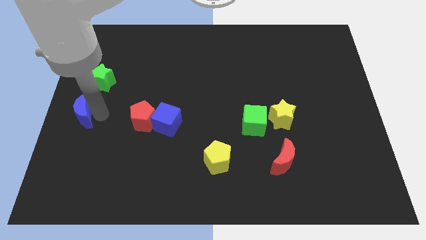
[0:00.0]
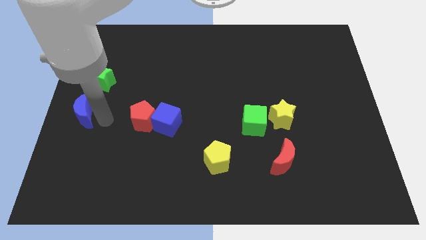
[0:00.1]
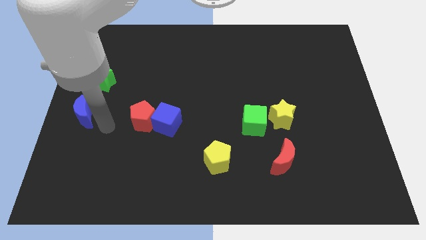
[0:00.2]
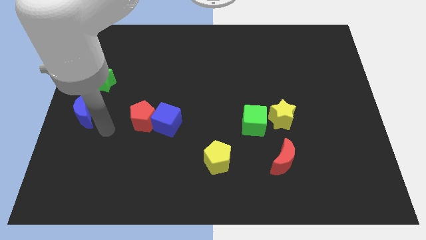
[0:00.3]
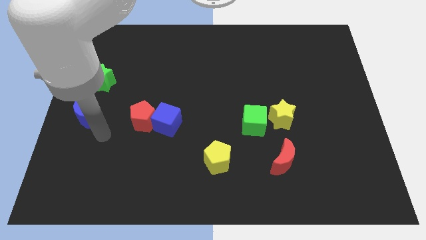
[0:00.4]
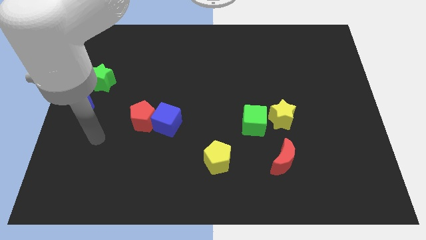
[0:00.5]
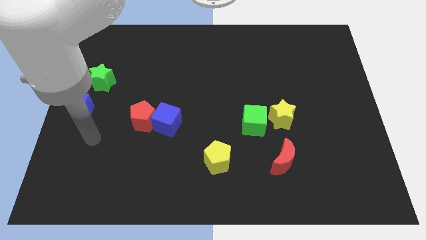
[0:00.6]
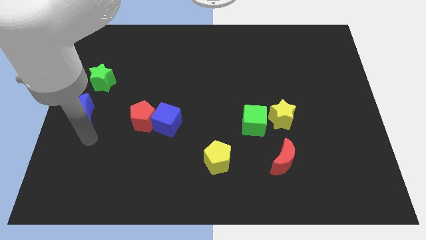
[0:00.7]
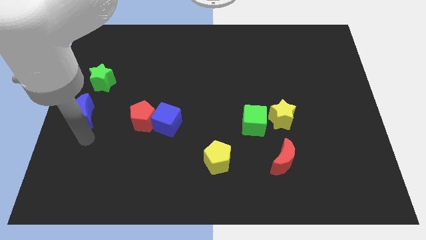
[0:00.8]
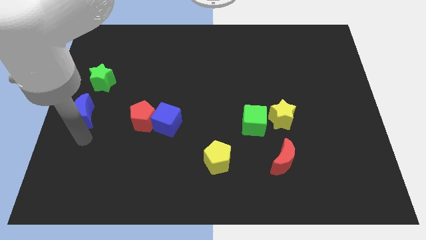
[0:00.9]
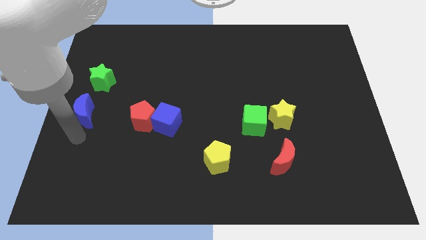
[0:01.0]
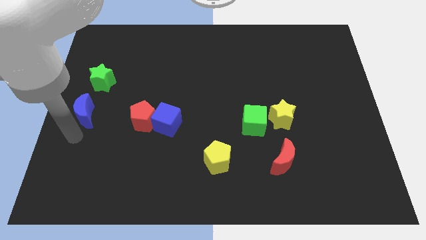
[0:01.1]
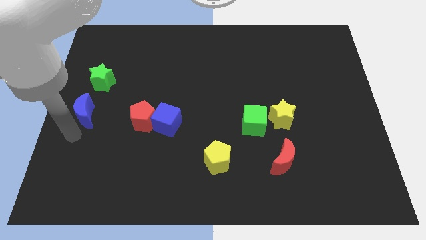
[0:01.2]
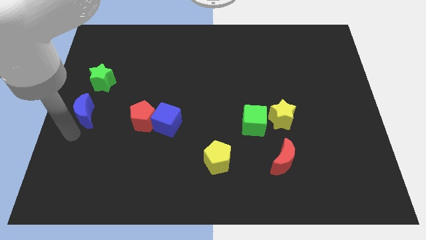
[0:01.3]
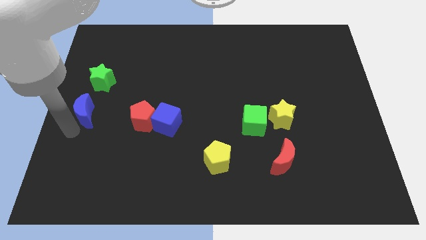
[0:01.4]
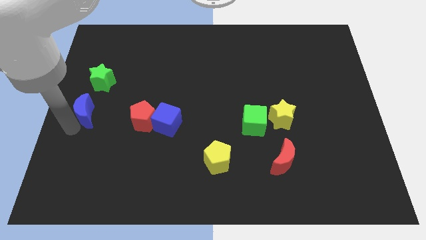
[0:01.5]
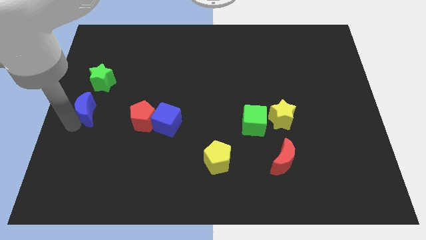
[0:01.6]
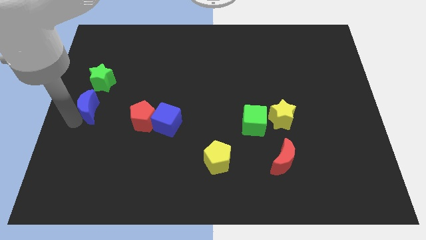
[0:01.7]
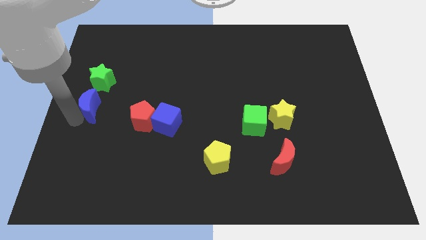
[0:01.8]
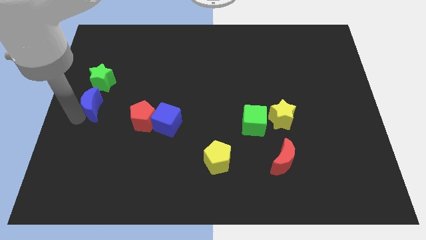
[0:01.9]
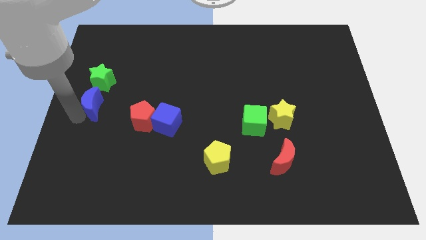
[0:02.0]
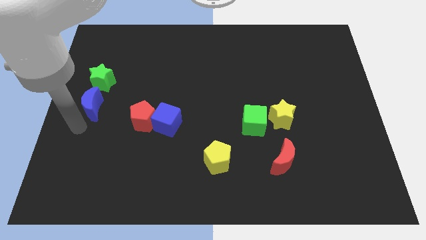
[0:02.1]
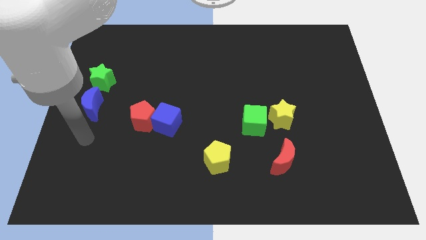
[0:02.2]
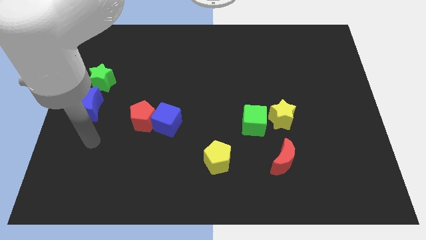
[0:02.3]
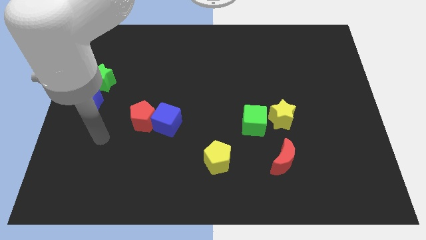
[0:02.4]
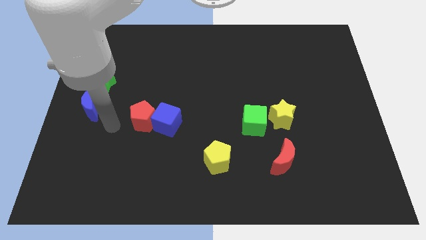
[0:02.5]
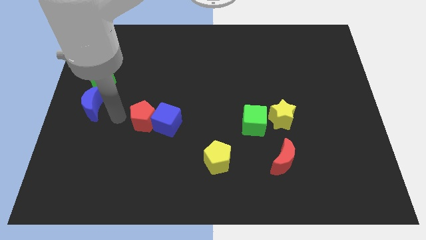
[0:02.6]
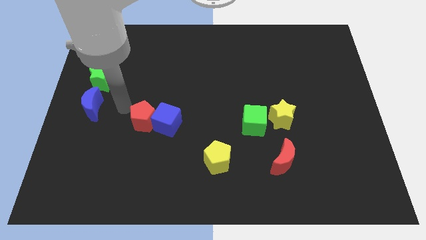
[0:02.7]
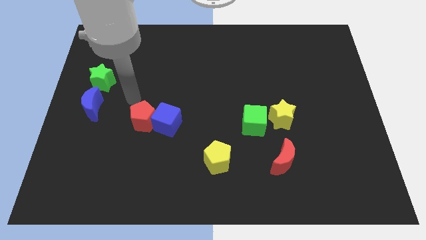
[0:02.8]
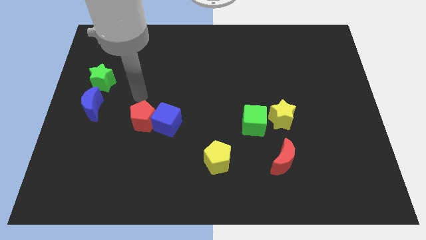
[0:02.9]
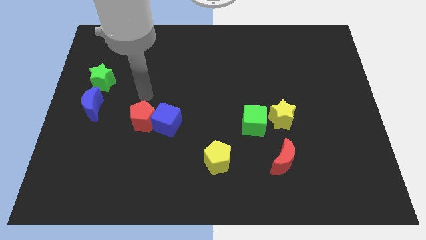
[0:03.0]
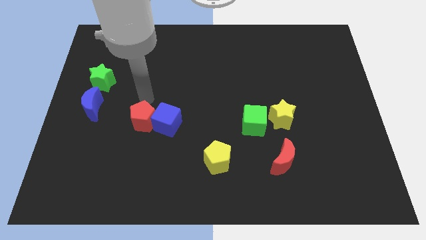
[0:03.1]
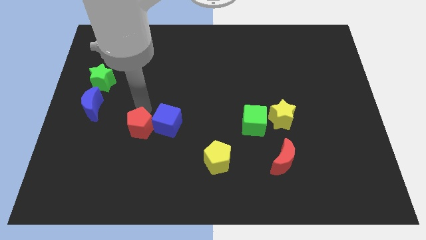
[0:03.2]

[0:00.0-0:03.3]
move the blue crescent slightly to the top

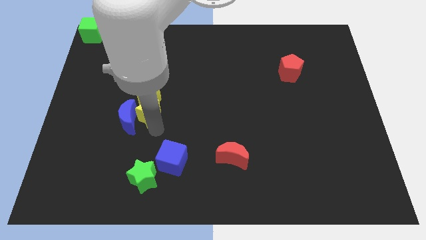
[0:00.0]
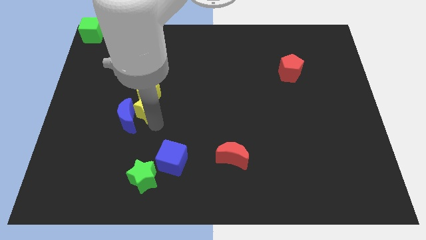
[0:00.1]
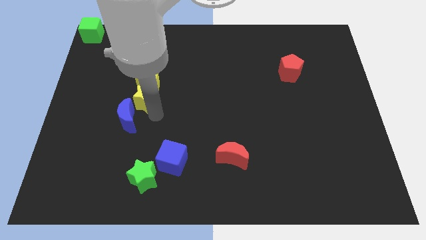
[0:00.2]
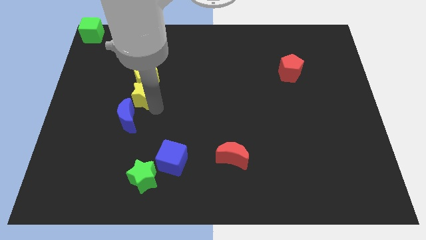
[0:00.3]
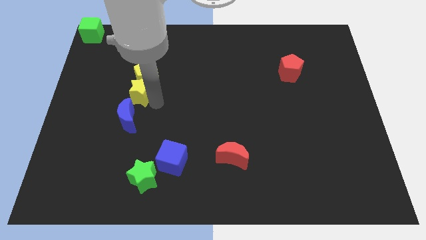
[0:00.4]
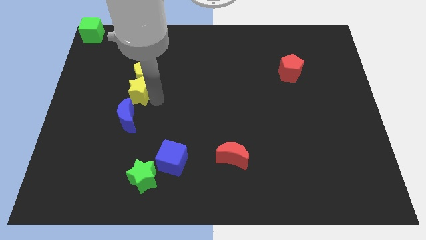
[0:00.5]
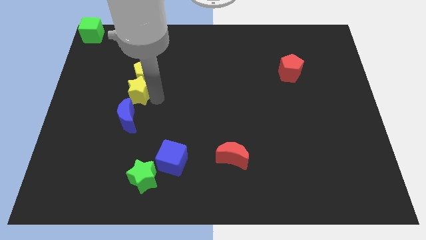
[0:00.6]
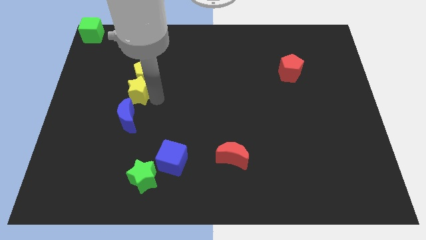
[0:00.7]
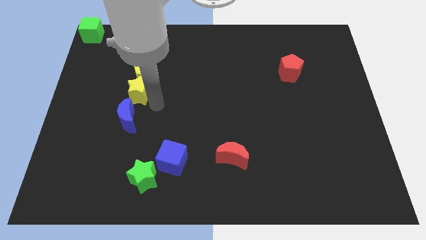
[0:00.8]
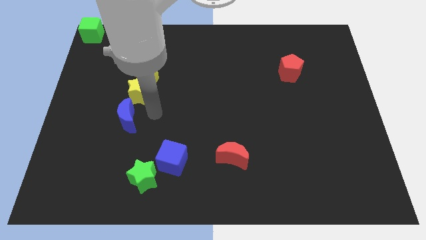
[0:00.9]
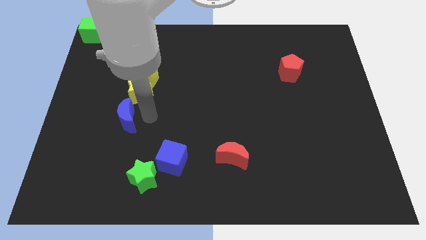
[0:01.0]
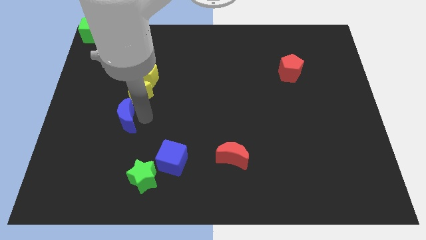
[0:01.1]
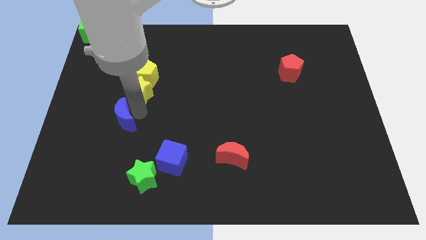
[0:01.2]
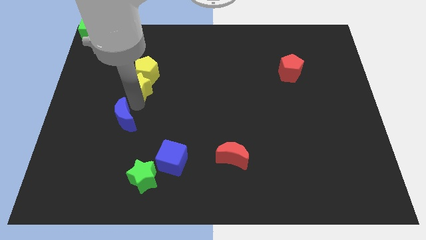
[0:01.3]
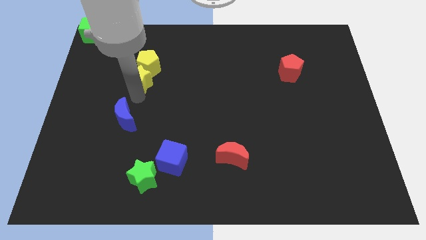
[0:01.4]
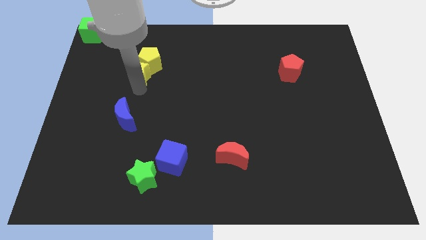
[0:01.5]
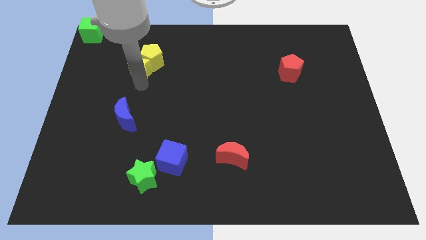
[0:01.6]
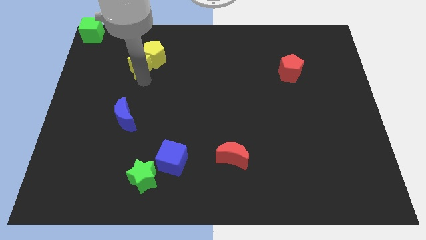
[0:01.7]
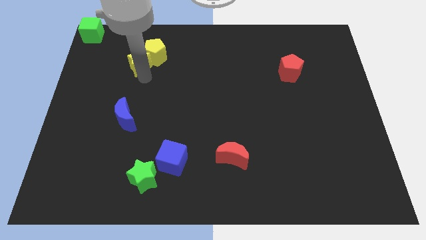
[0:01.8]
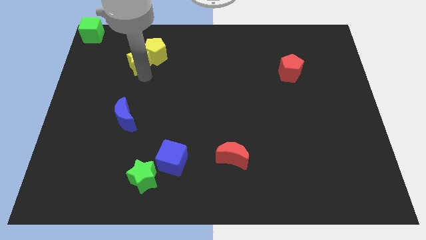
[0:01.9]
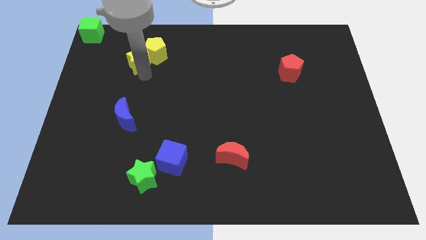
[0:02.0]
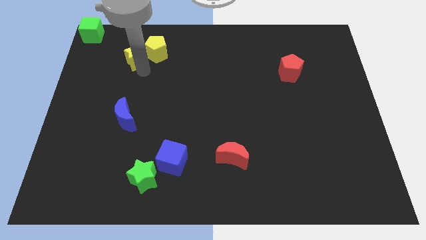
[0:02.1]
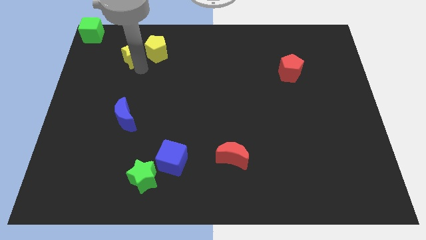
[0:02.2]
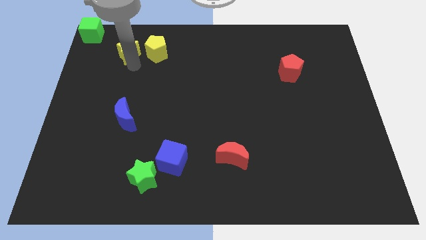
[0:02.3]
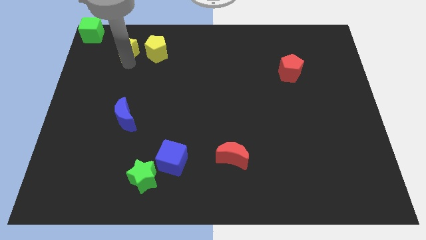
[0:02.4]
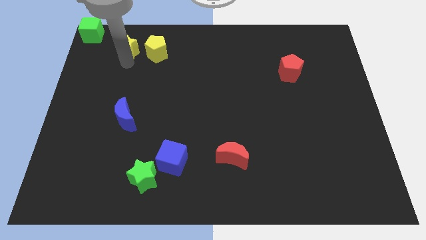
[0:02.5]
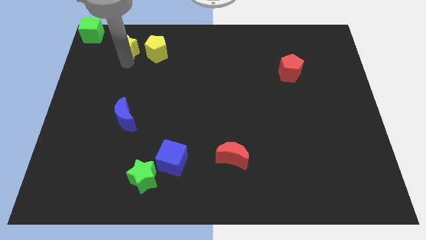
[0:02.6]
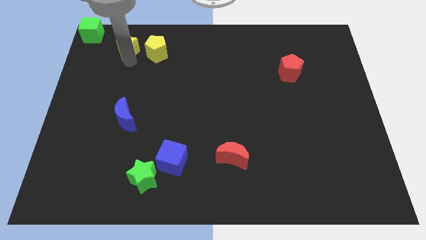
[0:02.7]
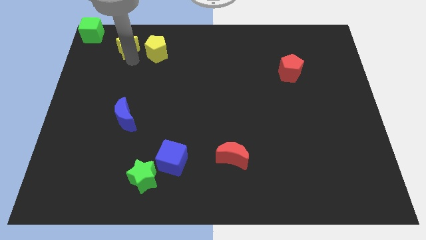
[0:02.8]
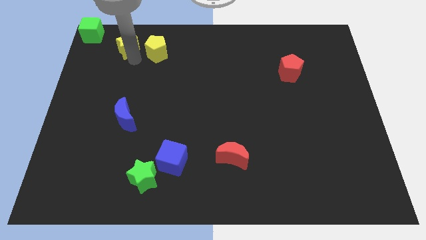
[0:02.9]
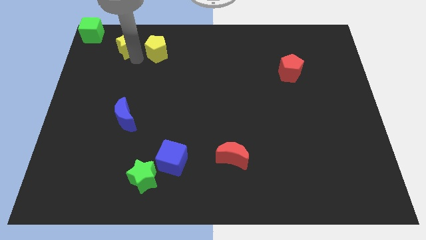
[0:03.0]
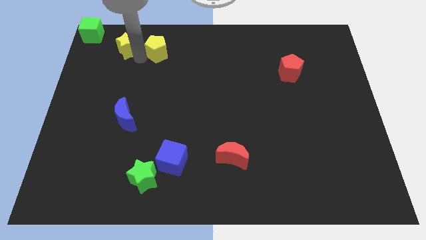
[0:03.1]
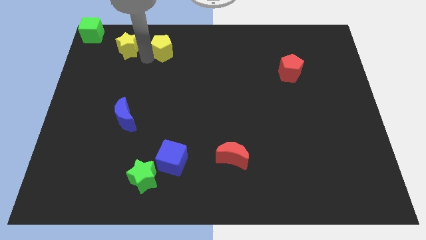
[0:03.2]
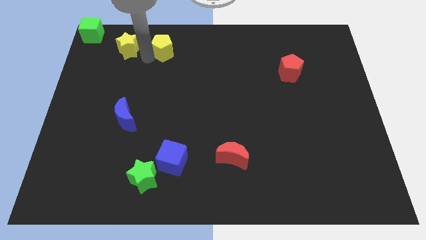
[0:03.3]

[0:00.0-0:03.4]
place the yellow star parallel left to the yellow pentagon

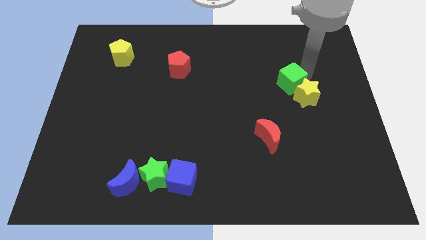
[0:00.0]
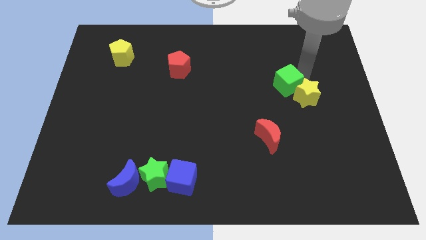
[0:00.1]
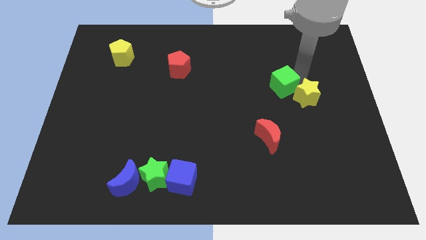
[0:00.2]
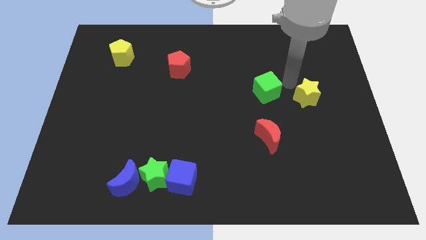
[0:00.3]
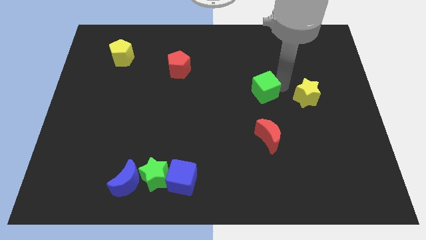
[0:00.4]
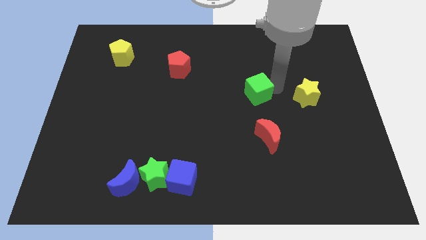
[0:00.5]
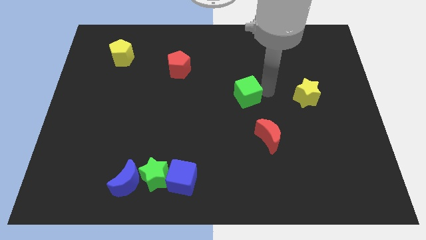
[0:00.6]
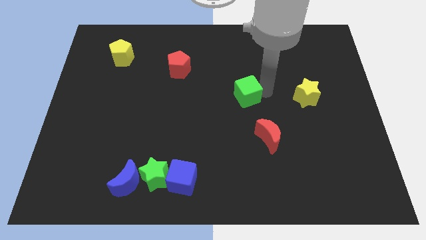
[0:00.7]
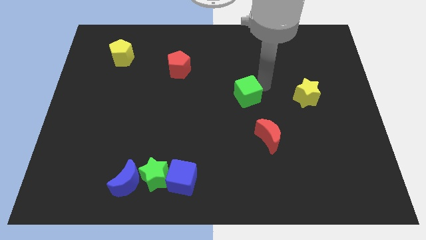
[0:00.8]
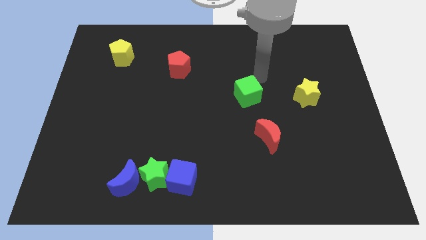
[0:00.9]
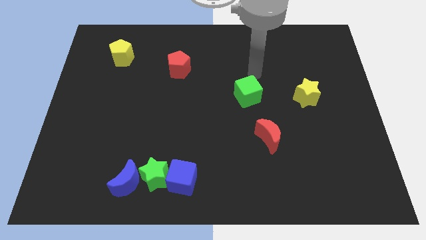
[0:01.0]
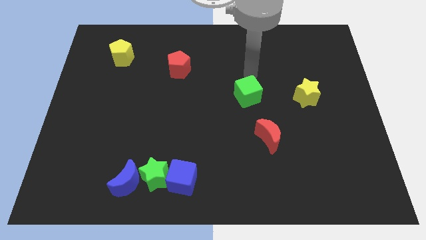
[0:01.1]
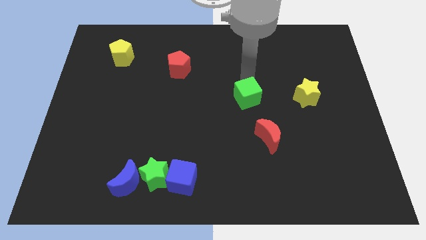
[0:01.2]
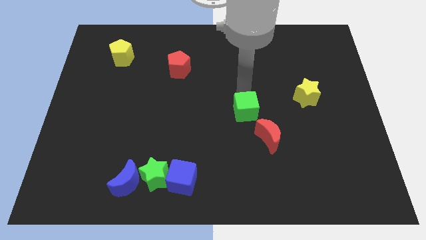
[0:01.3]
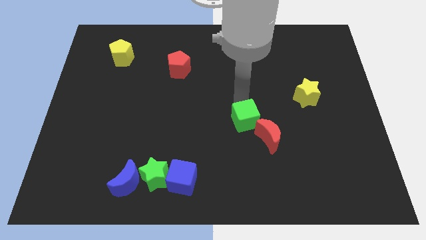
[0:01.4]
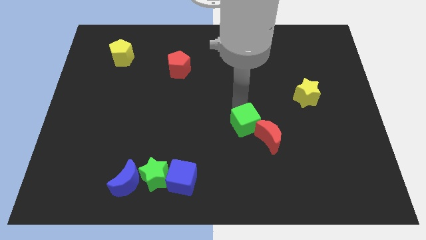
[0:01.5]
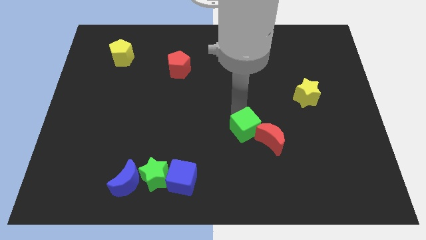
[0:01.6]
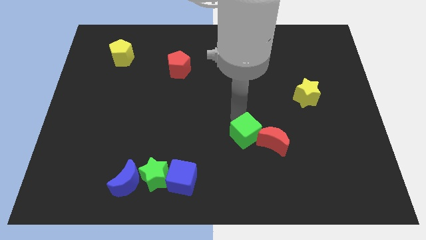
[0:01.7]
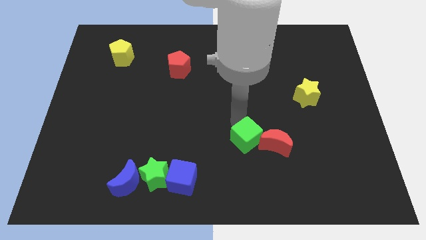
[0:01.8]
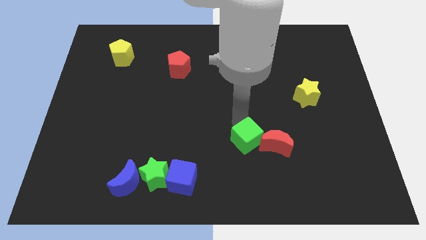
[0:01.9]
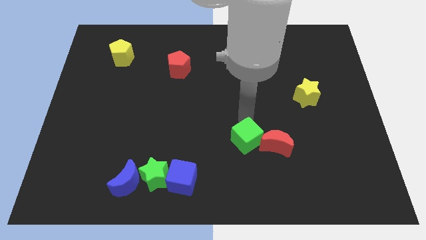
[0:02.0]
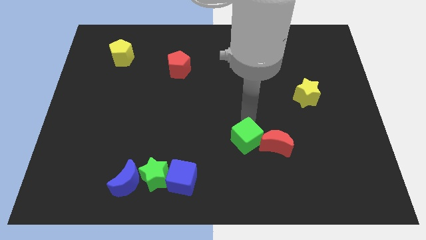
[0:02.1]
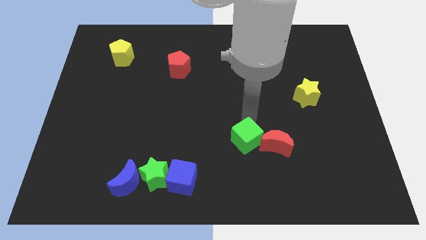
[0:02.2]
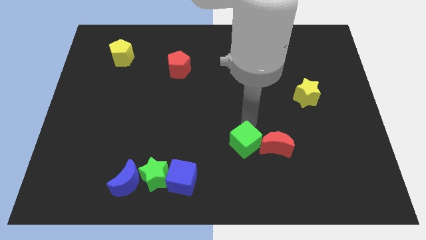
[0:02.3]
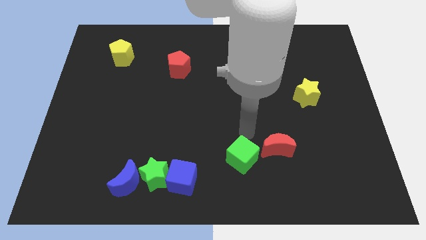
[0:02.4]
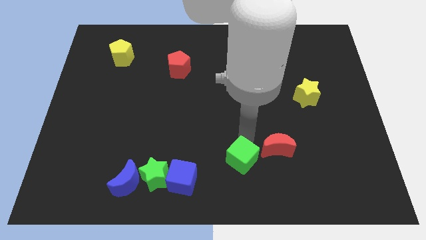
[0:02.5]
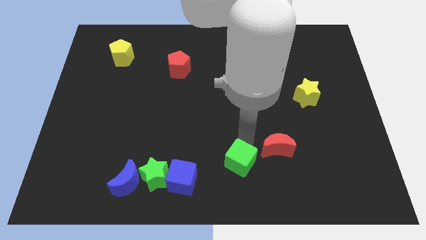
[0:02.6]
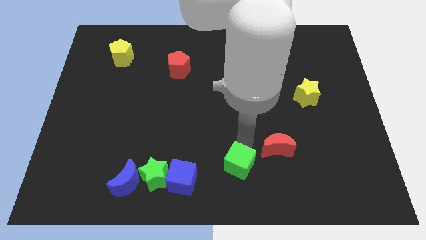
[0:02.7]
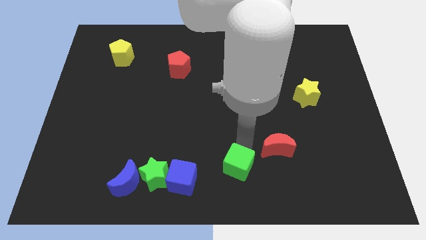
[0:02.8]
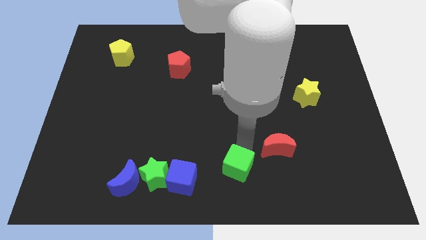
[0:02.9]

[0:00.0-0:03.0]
move green square to the bottom center of the board
